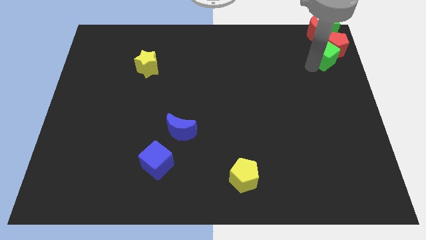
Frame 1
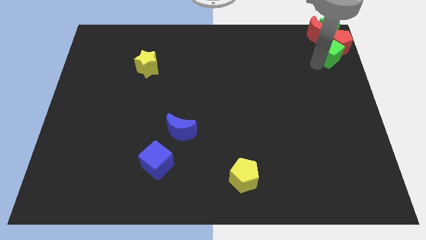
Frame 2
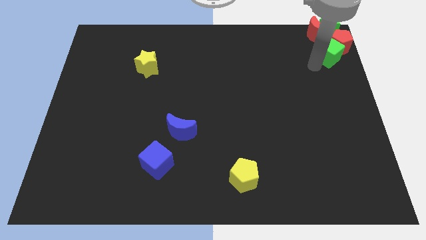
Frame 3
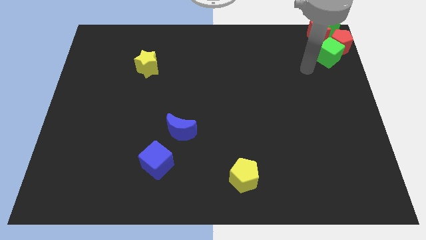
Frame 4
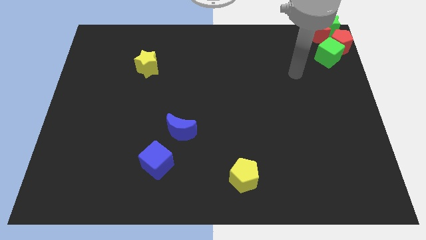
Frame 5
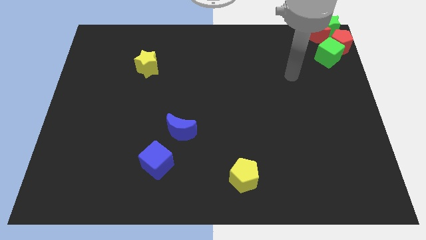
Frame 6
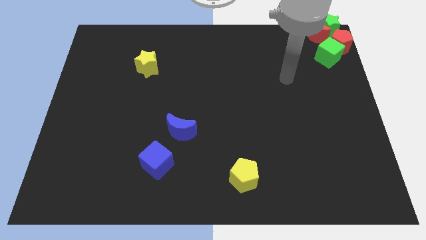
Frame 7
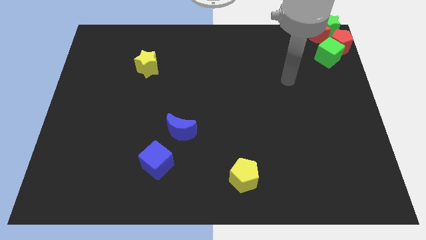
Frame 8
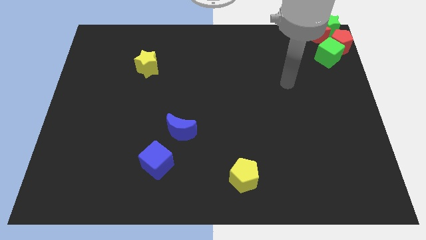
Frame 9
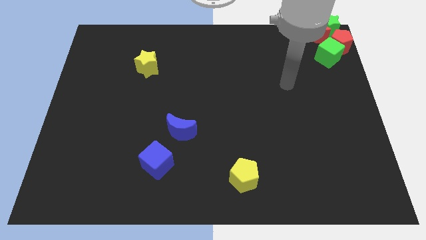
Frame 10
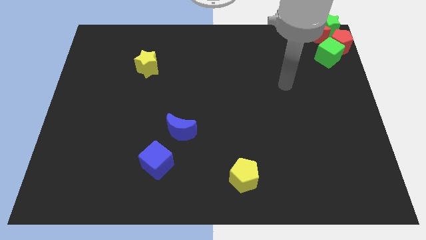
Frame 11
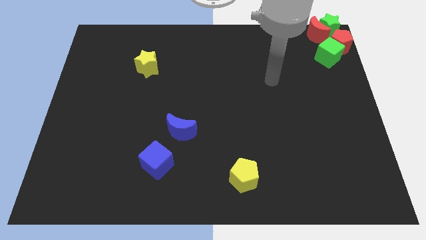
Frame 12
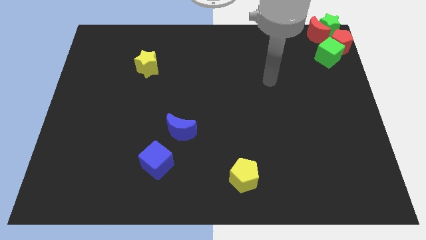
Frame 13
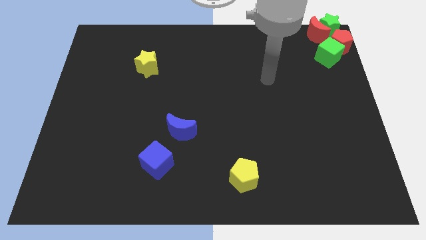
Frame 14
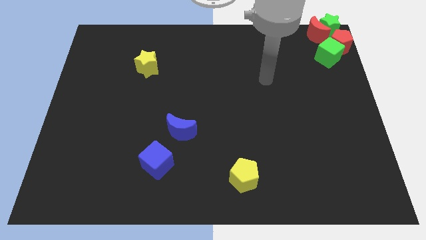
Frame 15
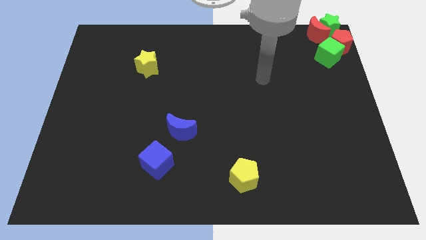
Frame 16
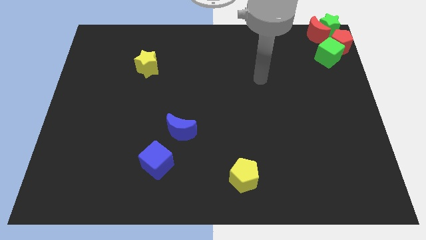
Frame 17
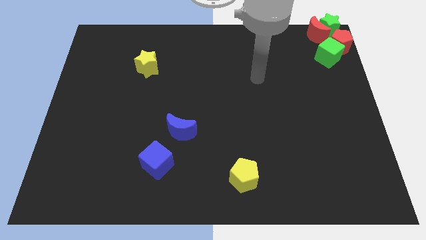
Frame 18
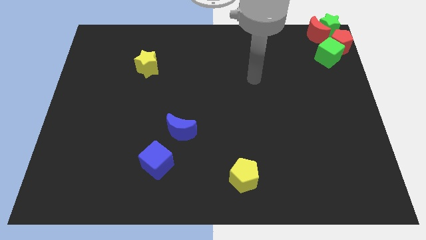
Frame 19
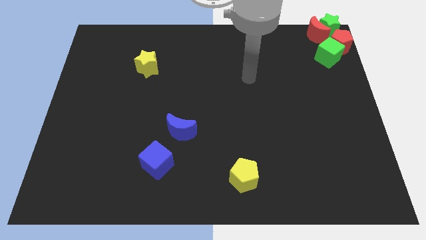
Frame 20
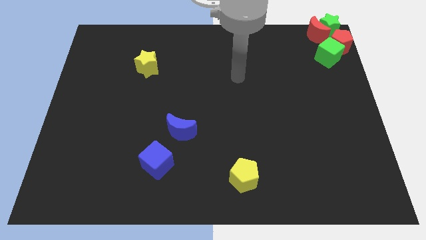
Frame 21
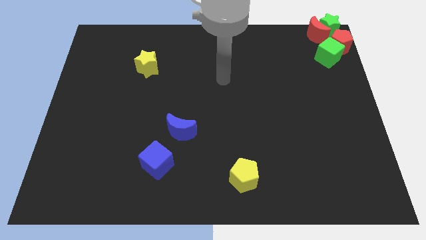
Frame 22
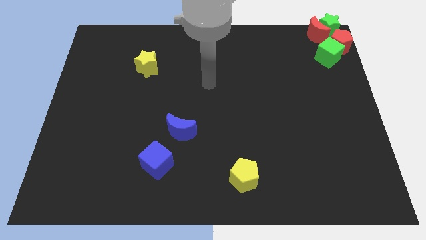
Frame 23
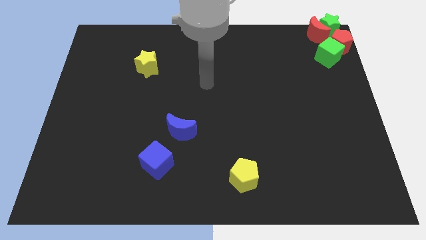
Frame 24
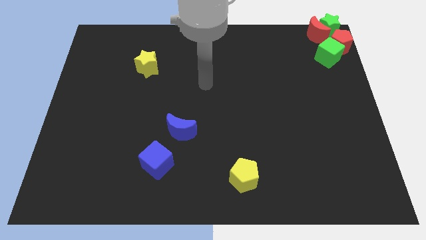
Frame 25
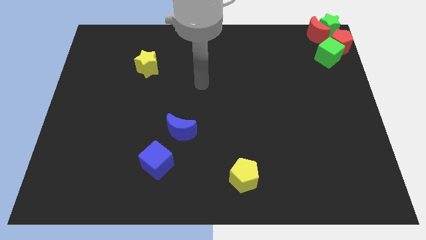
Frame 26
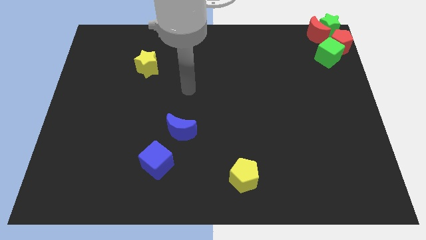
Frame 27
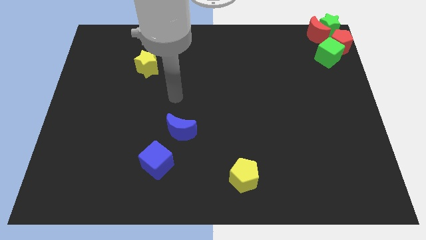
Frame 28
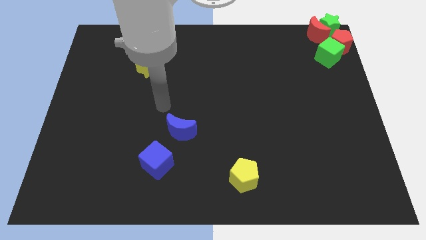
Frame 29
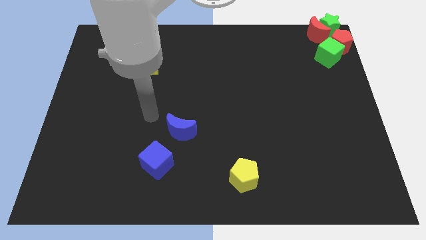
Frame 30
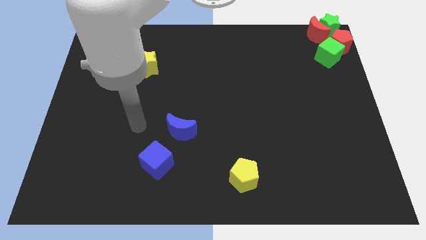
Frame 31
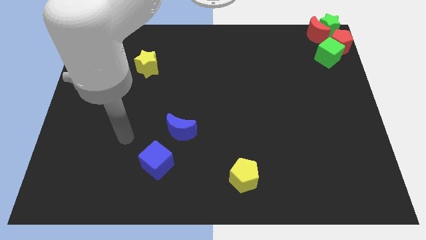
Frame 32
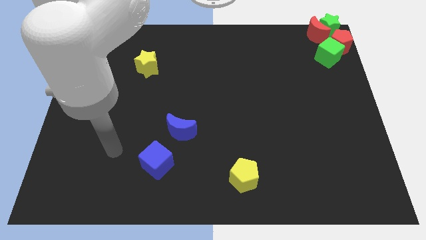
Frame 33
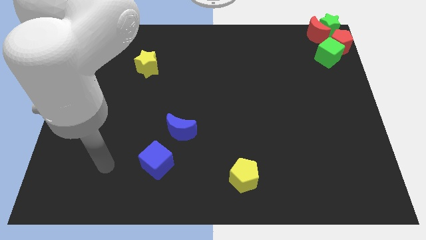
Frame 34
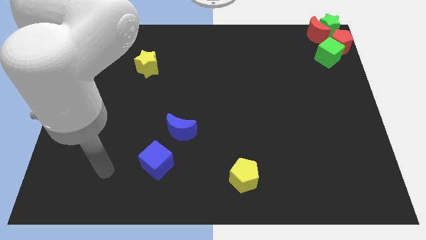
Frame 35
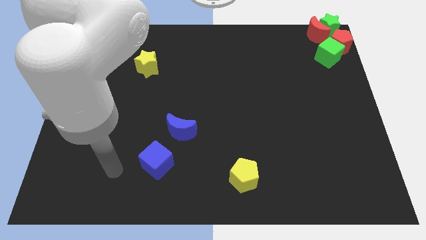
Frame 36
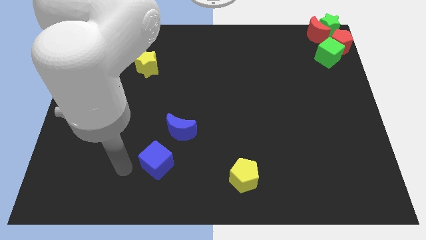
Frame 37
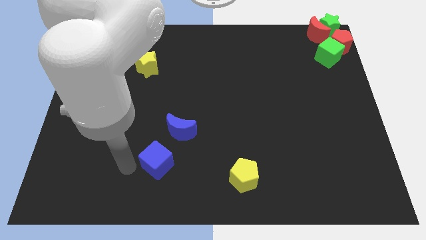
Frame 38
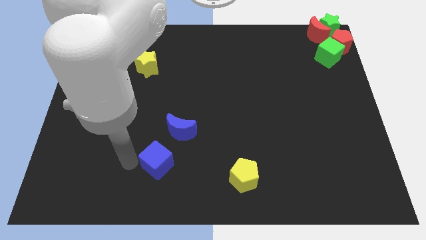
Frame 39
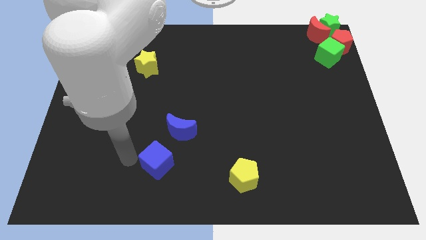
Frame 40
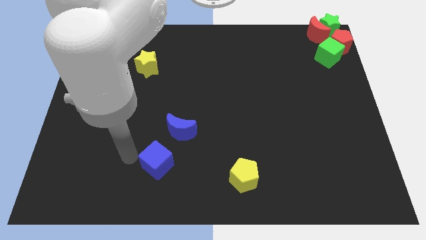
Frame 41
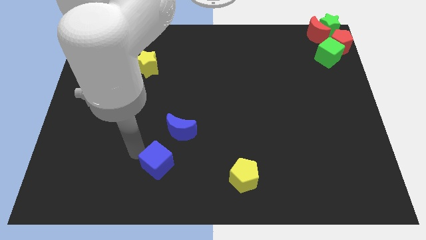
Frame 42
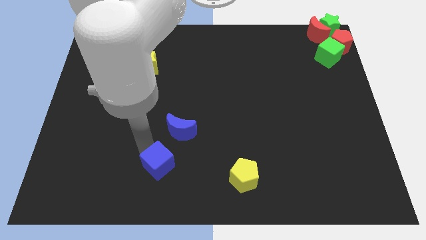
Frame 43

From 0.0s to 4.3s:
move your arm away from the green cube

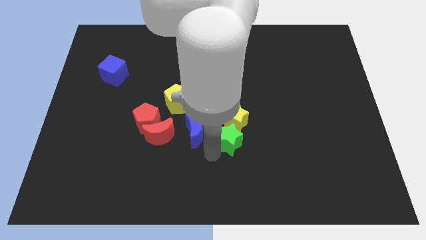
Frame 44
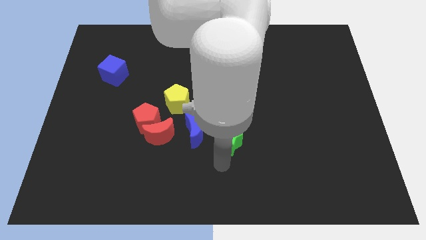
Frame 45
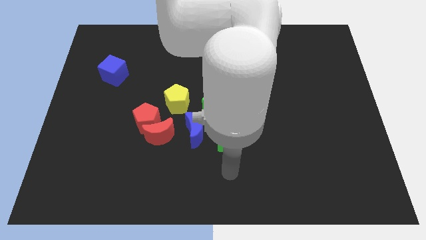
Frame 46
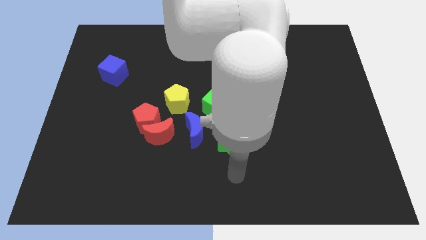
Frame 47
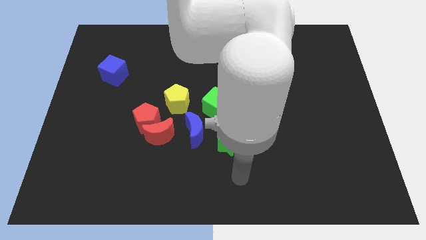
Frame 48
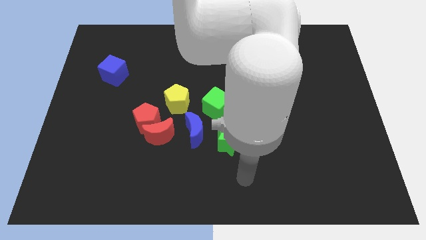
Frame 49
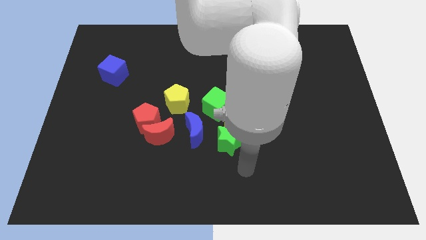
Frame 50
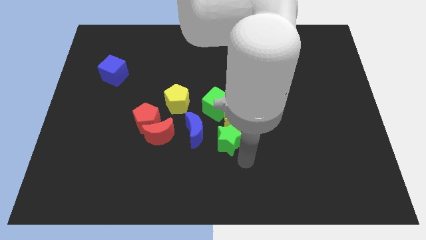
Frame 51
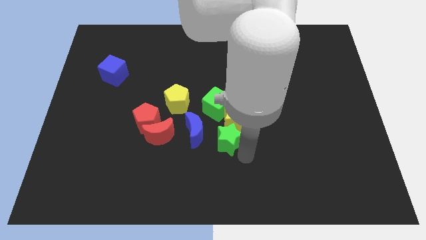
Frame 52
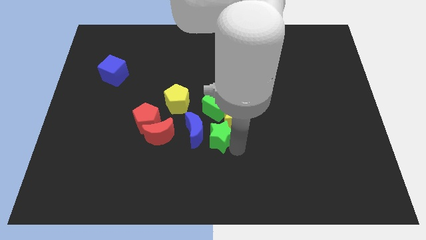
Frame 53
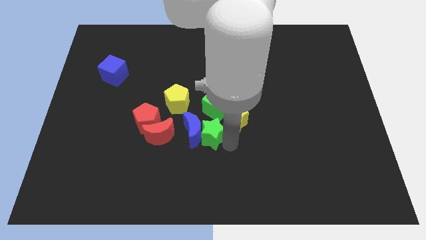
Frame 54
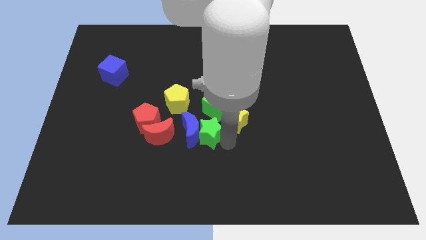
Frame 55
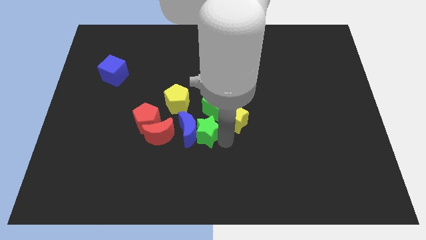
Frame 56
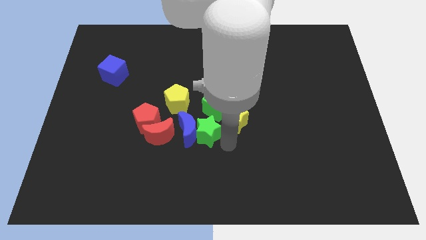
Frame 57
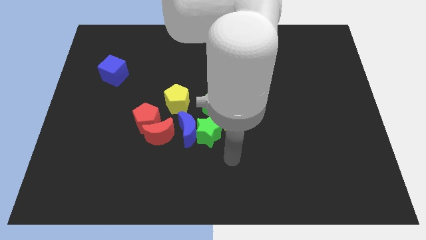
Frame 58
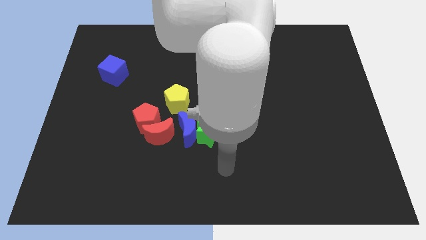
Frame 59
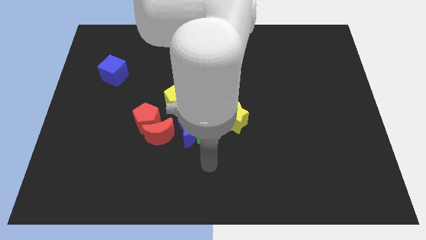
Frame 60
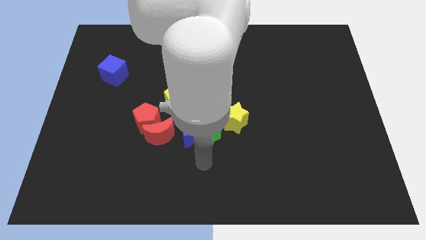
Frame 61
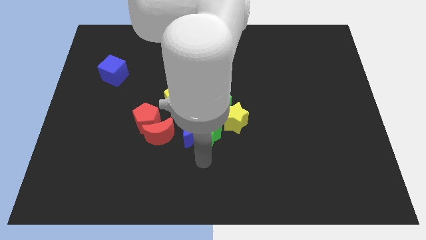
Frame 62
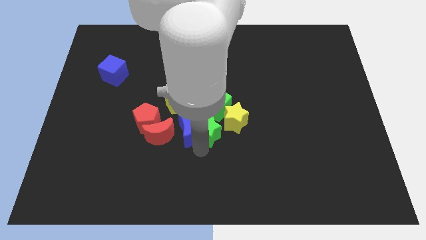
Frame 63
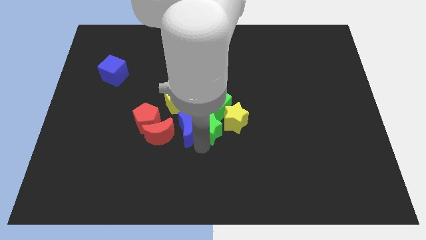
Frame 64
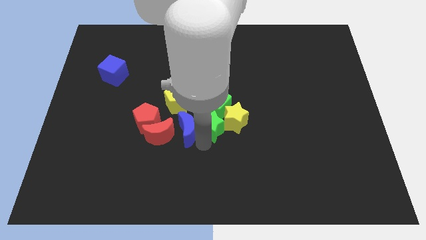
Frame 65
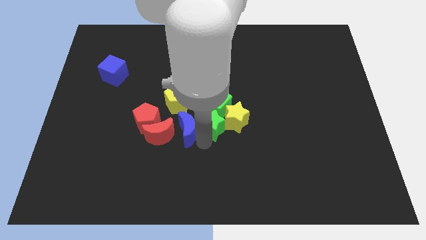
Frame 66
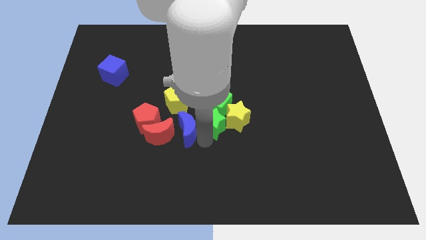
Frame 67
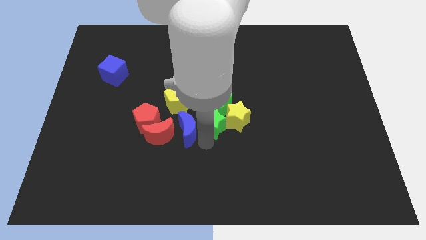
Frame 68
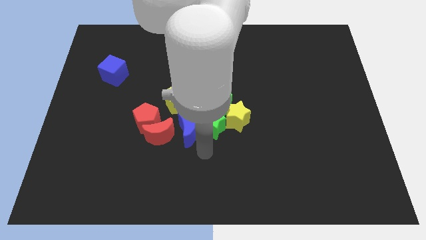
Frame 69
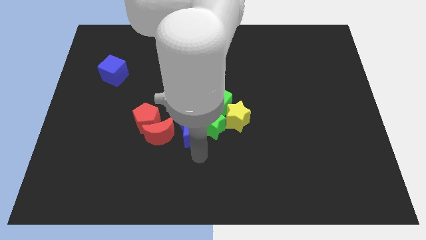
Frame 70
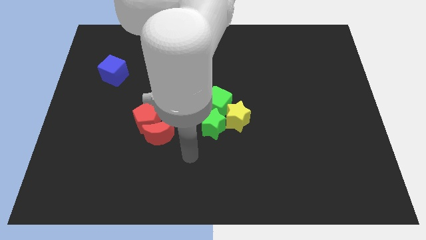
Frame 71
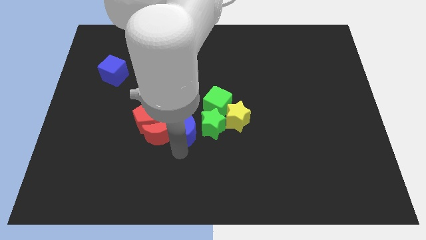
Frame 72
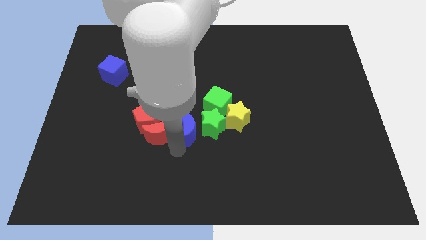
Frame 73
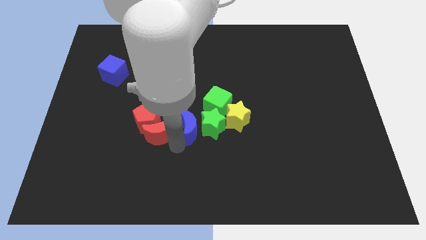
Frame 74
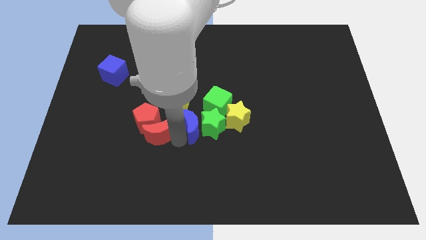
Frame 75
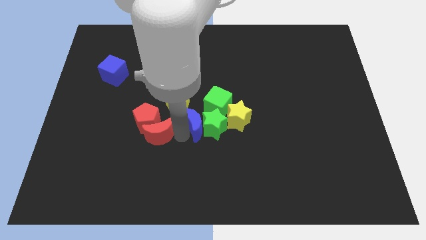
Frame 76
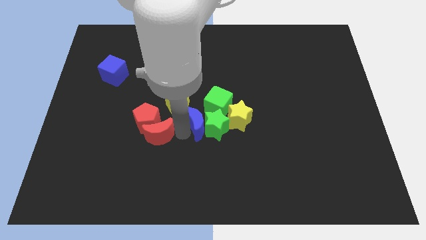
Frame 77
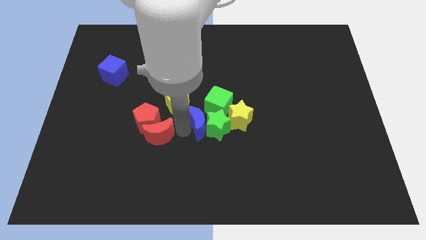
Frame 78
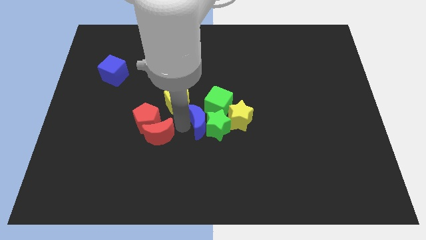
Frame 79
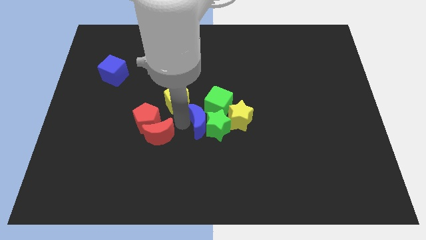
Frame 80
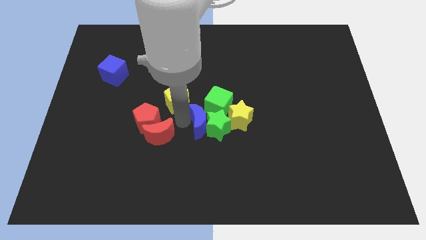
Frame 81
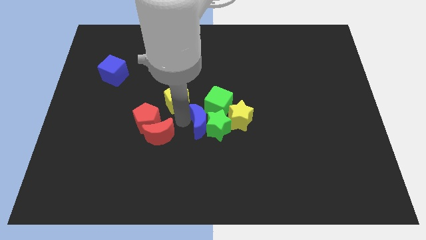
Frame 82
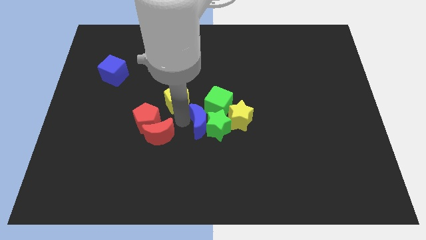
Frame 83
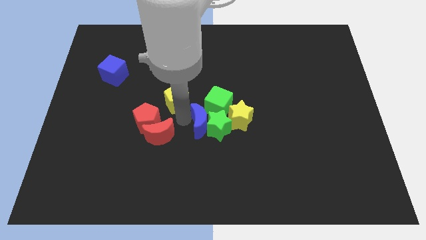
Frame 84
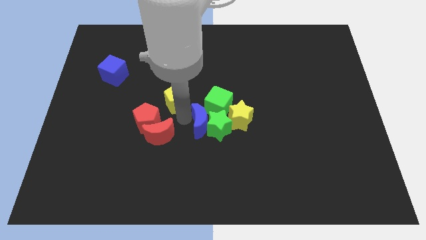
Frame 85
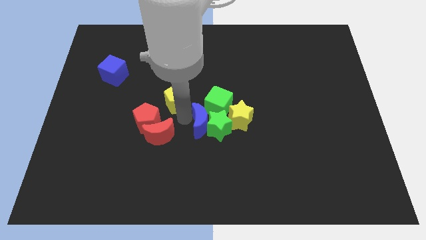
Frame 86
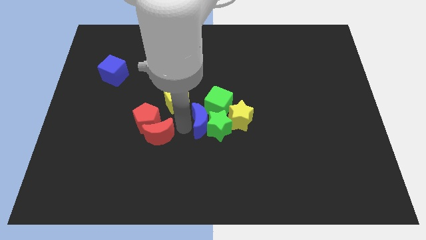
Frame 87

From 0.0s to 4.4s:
slide the green star and blue moon into the green cube

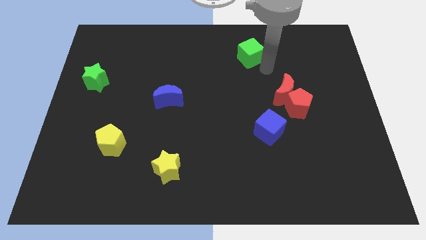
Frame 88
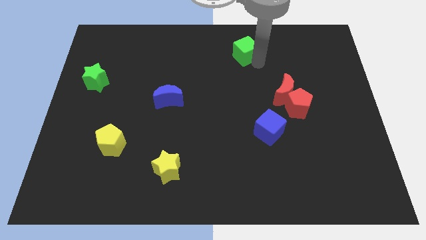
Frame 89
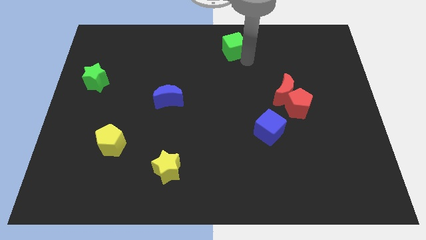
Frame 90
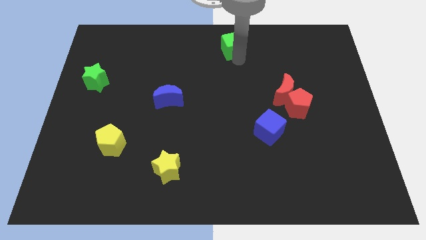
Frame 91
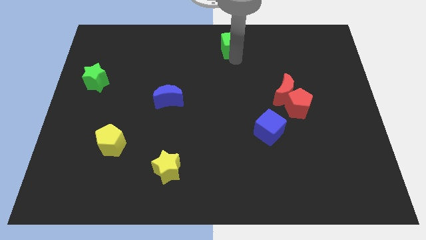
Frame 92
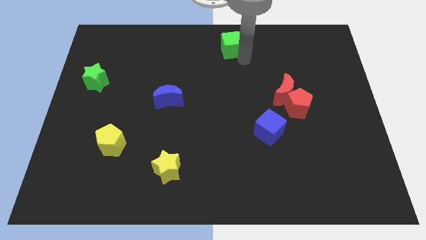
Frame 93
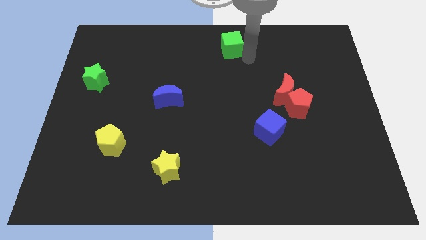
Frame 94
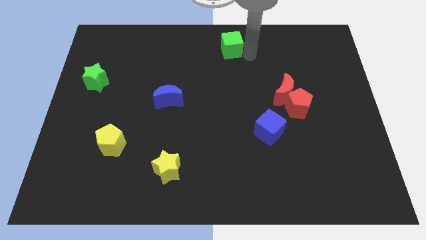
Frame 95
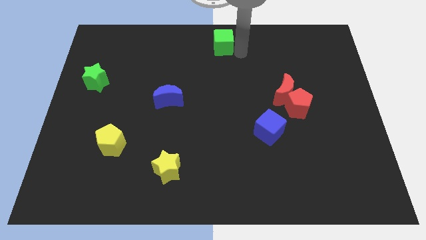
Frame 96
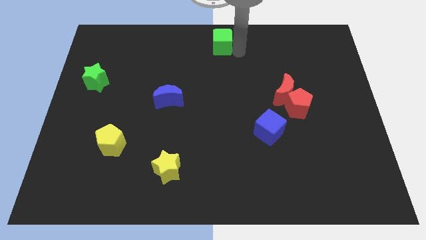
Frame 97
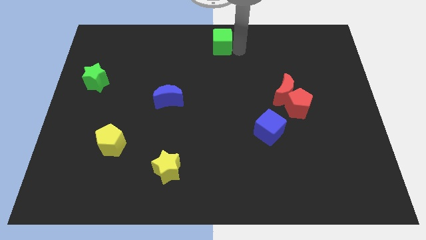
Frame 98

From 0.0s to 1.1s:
slide the green cube to the top center of the board
